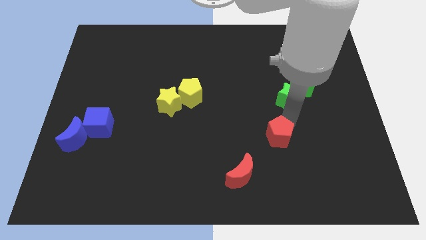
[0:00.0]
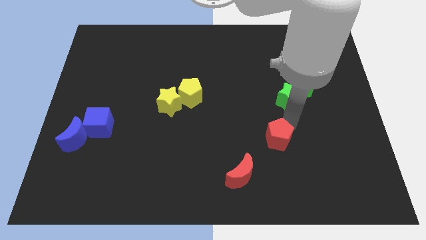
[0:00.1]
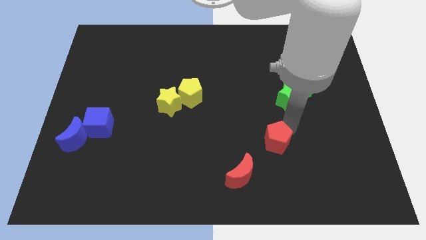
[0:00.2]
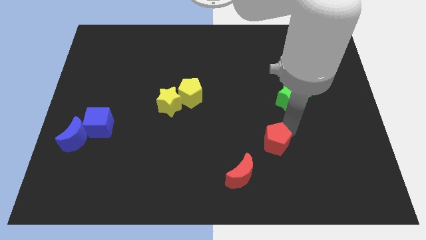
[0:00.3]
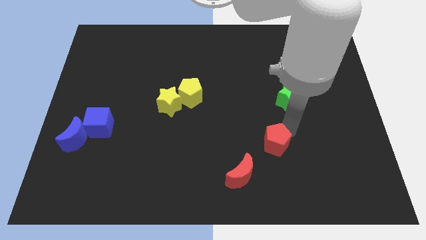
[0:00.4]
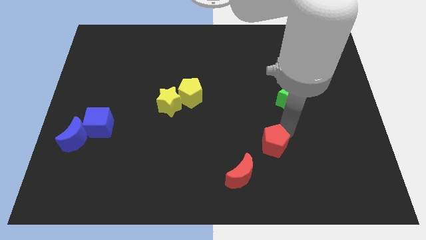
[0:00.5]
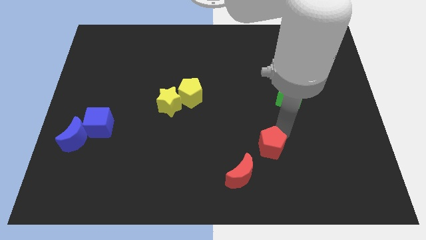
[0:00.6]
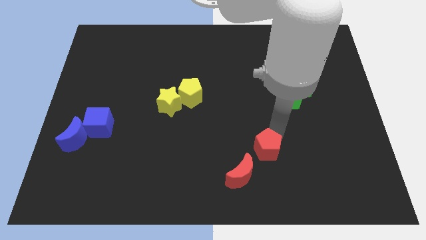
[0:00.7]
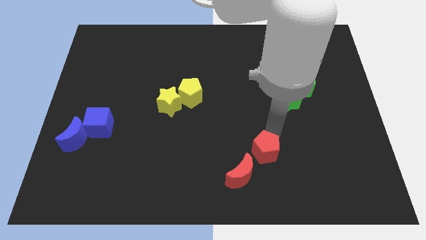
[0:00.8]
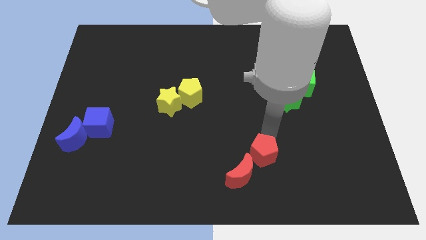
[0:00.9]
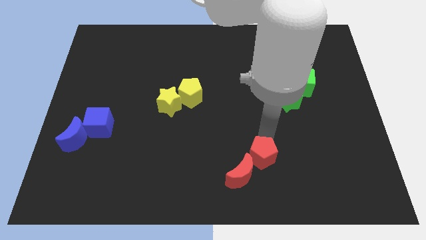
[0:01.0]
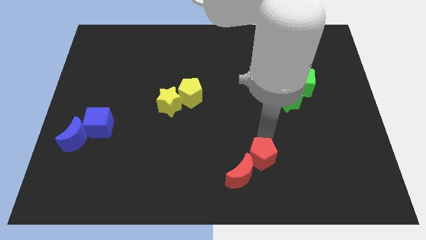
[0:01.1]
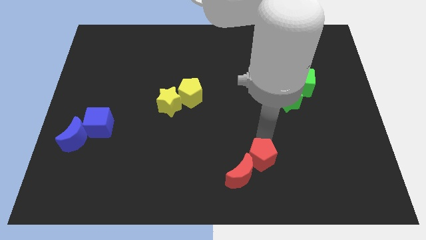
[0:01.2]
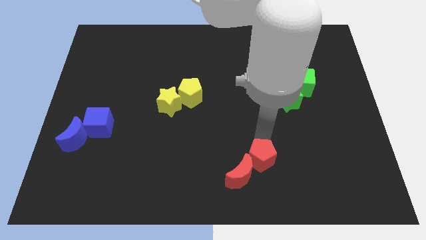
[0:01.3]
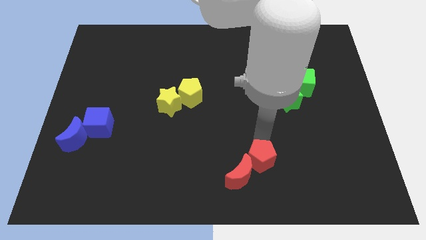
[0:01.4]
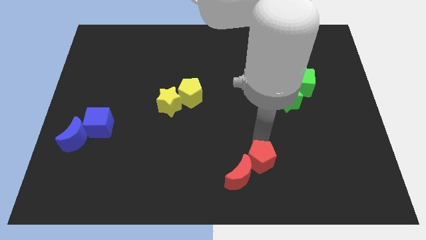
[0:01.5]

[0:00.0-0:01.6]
move the red pentagon into red moon

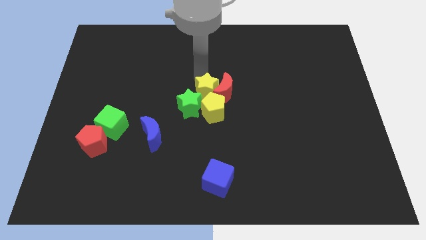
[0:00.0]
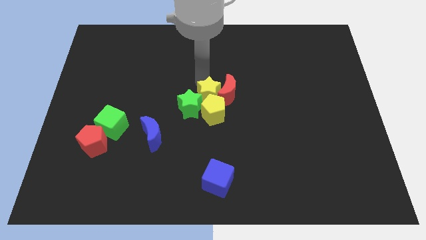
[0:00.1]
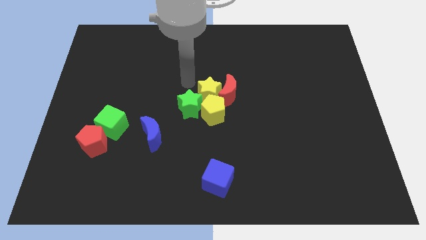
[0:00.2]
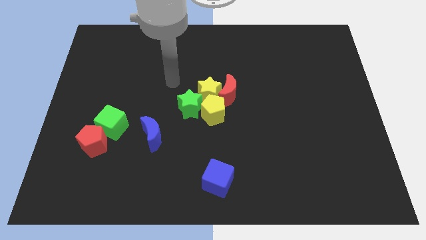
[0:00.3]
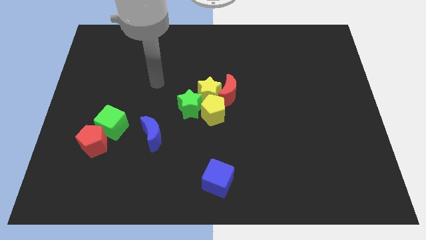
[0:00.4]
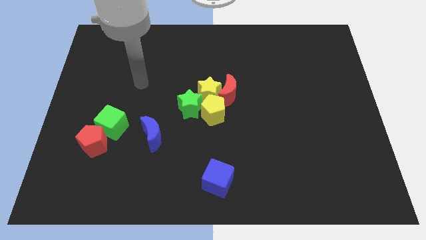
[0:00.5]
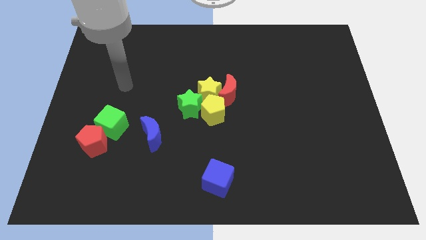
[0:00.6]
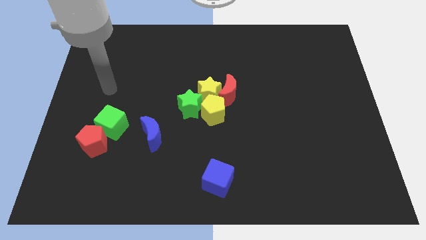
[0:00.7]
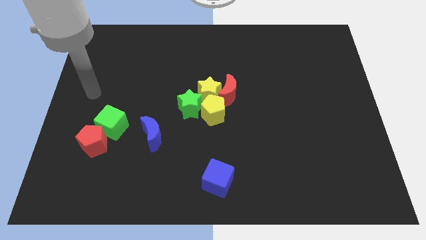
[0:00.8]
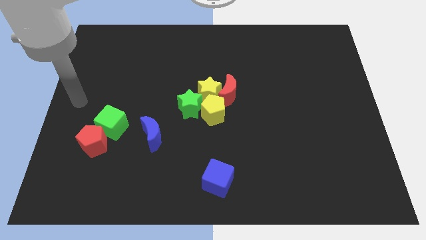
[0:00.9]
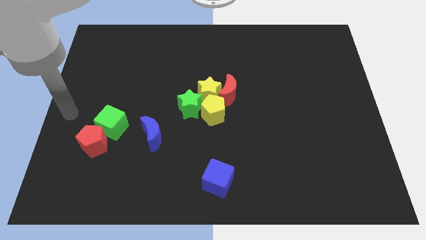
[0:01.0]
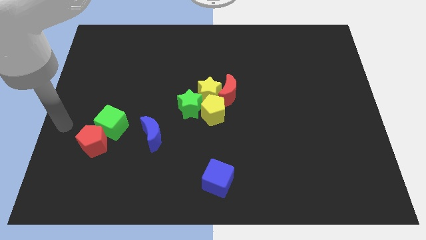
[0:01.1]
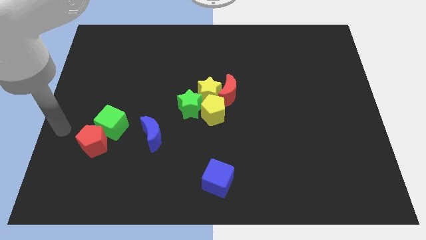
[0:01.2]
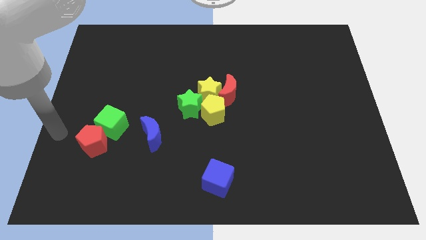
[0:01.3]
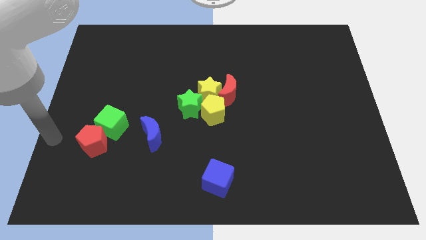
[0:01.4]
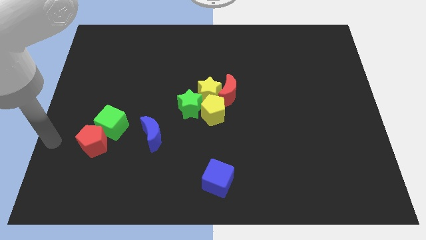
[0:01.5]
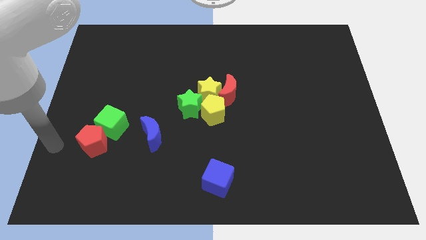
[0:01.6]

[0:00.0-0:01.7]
point your arm to the left side of red pentagon

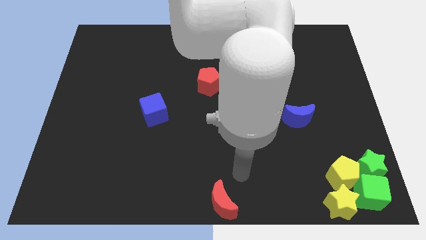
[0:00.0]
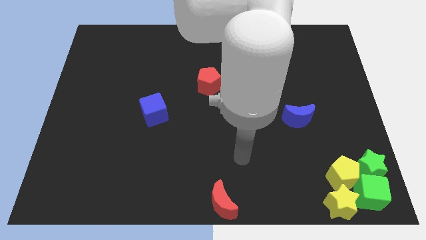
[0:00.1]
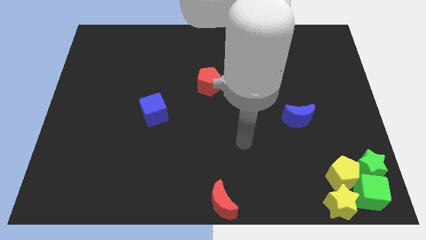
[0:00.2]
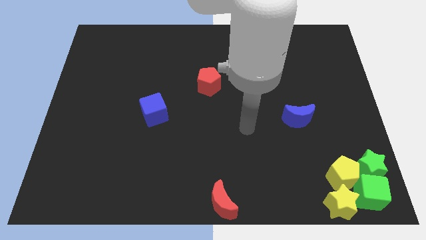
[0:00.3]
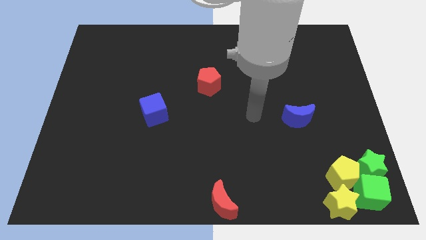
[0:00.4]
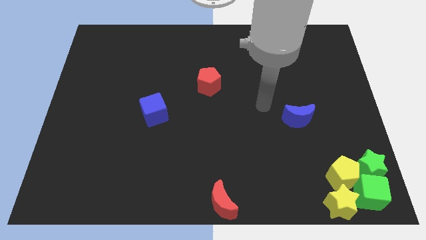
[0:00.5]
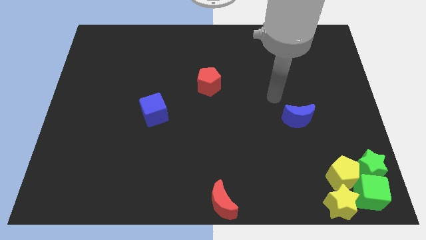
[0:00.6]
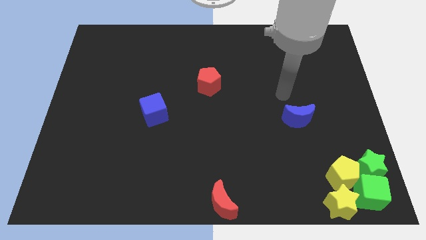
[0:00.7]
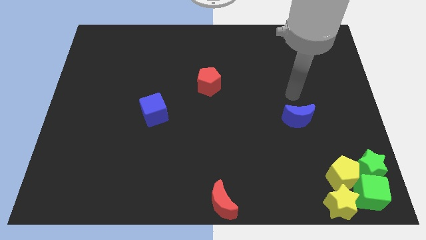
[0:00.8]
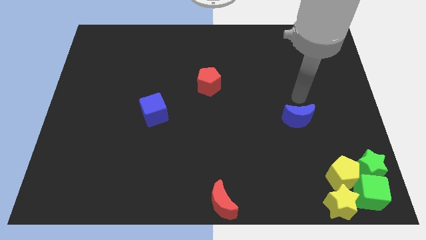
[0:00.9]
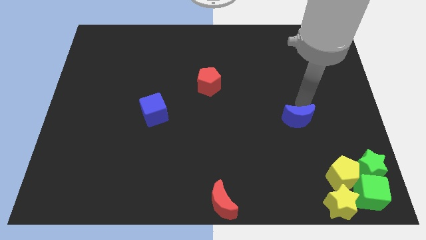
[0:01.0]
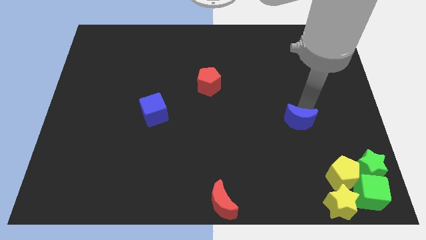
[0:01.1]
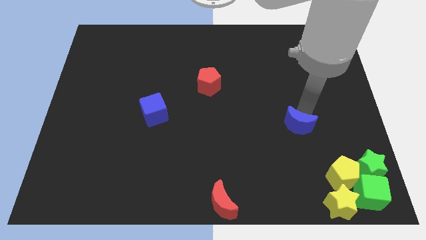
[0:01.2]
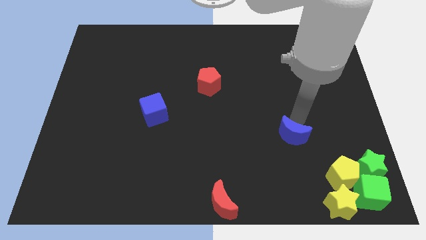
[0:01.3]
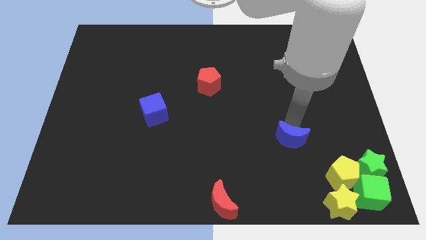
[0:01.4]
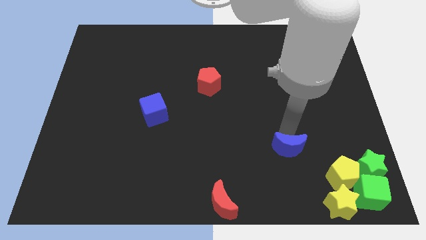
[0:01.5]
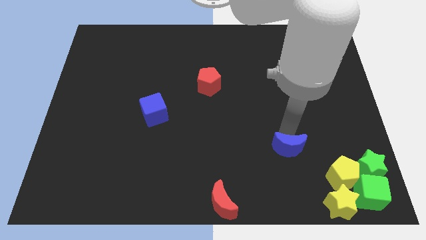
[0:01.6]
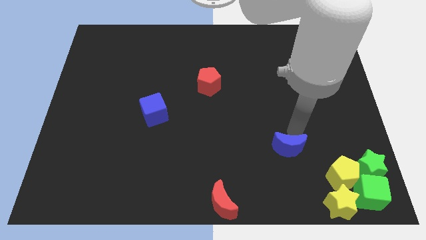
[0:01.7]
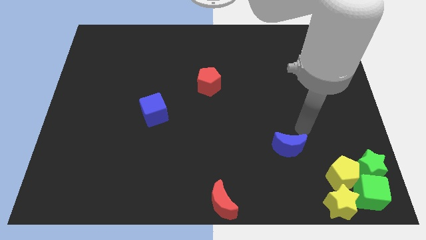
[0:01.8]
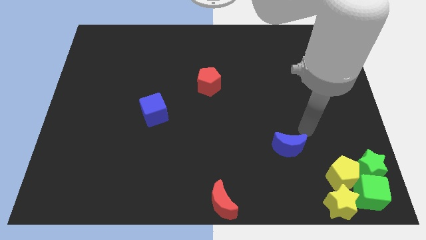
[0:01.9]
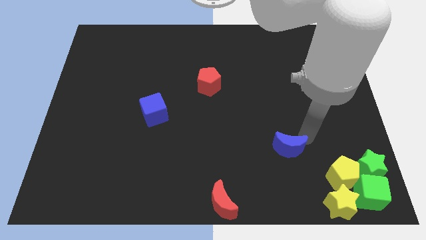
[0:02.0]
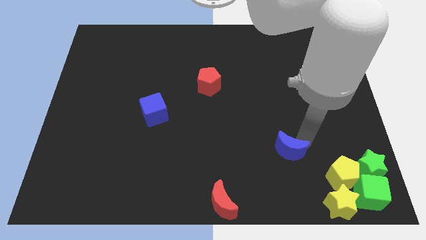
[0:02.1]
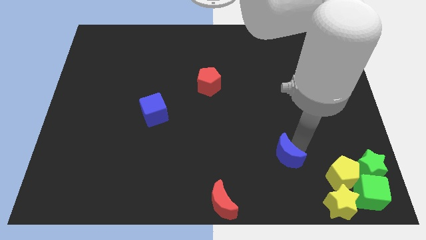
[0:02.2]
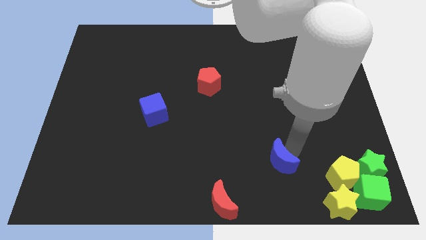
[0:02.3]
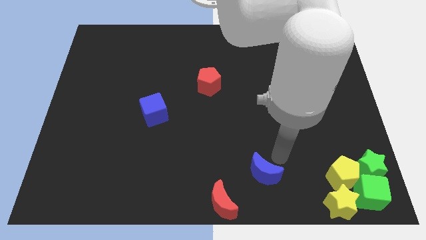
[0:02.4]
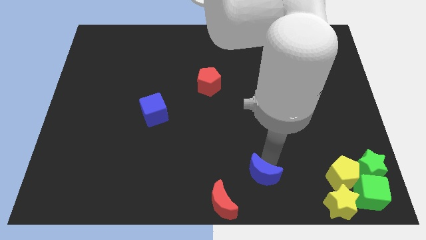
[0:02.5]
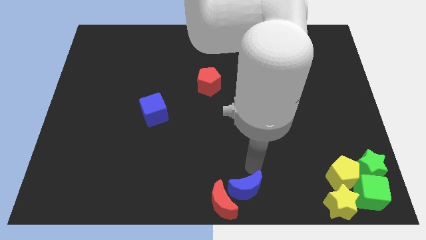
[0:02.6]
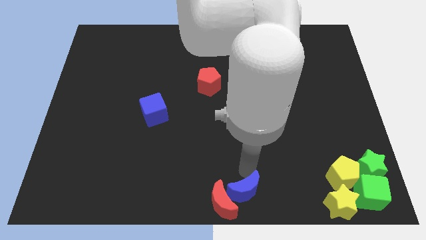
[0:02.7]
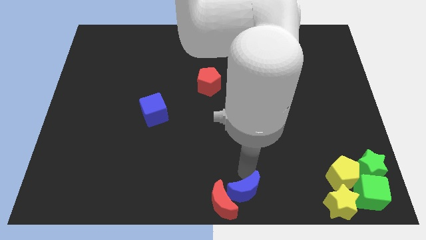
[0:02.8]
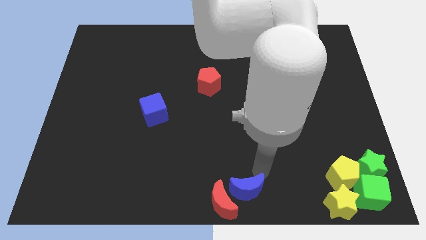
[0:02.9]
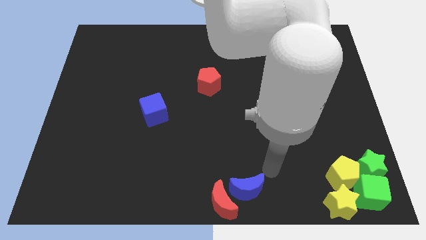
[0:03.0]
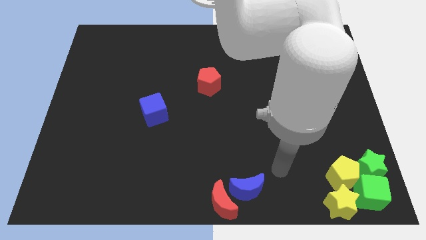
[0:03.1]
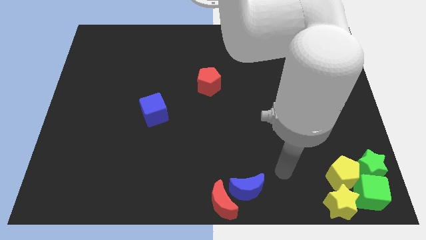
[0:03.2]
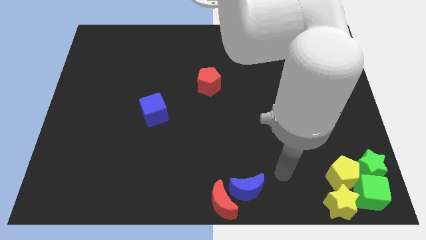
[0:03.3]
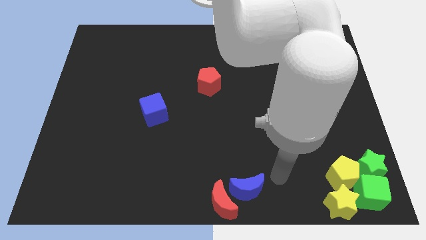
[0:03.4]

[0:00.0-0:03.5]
push the blue crescent close to the red crescent

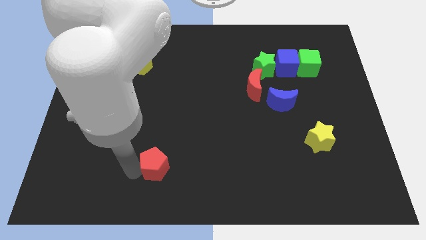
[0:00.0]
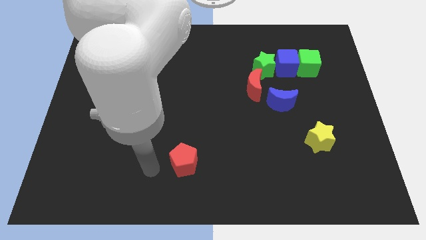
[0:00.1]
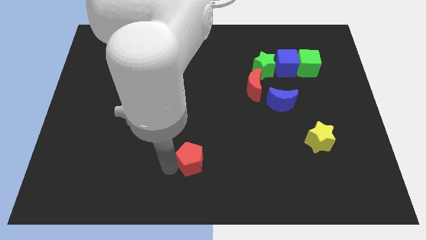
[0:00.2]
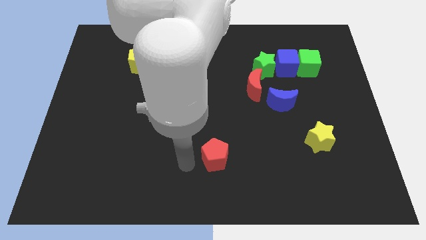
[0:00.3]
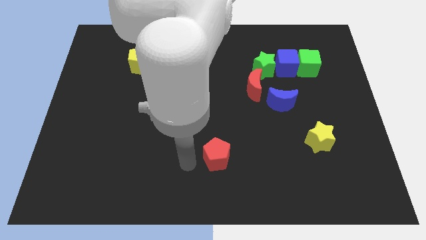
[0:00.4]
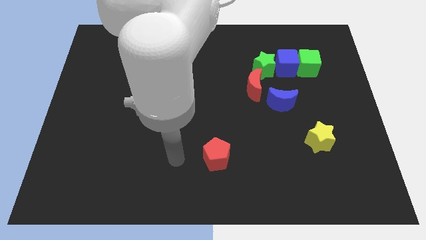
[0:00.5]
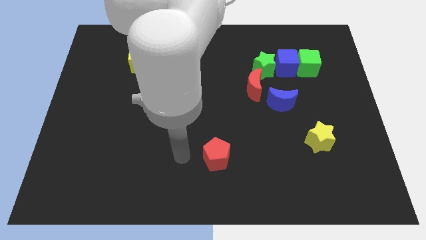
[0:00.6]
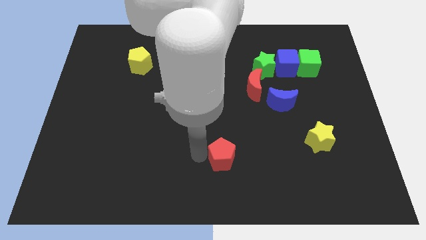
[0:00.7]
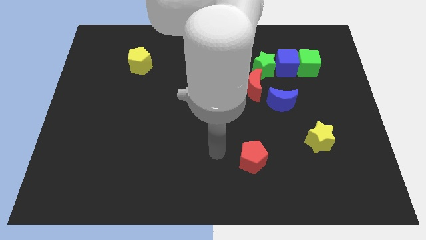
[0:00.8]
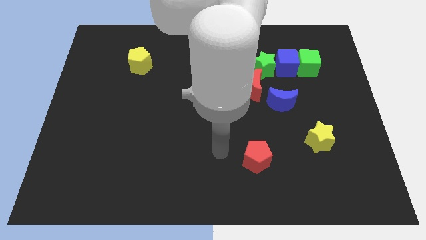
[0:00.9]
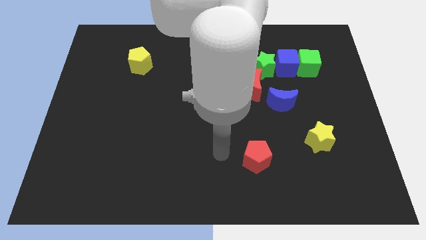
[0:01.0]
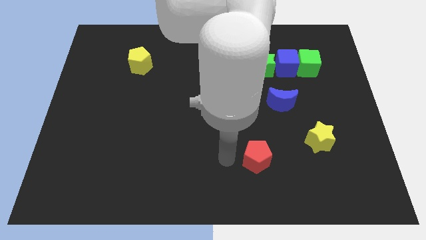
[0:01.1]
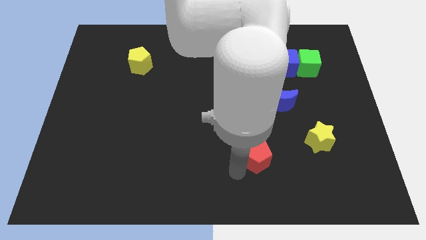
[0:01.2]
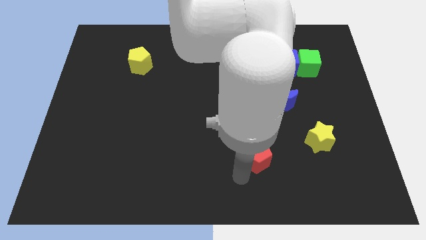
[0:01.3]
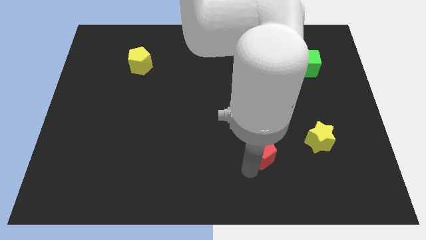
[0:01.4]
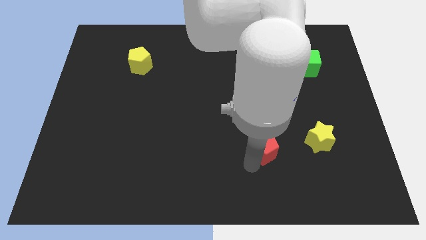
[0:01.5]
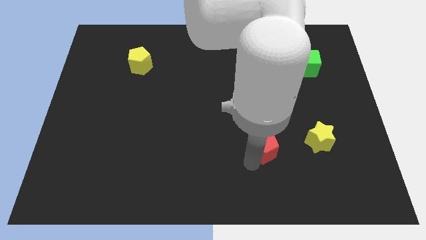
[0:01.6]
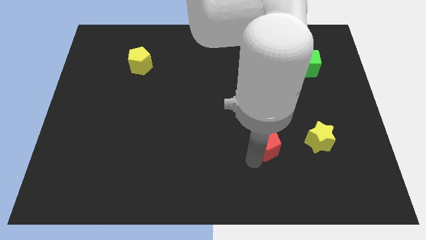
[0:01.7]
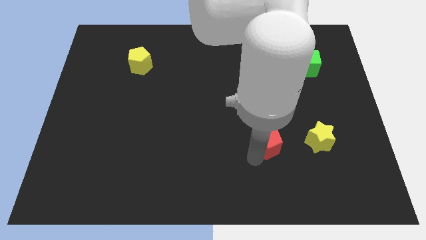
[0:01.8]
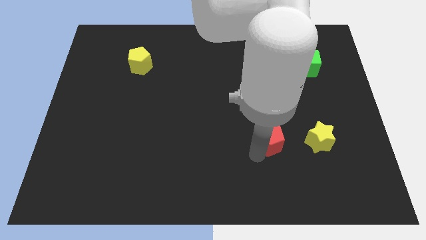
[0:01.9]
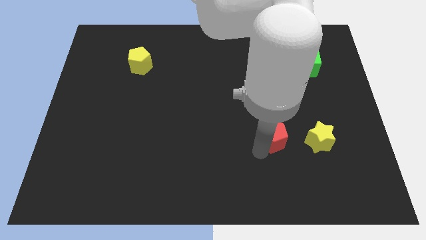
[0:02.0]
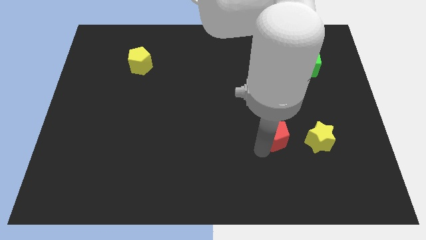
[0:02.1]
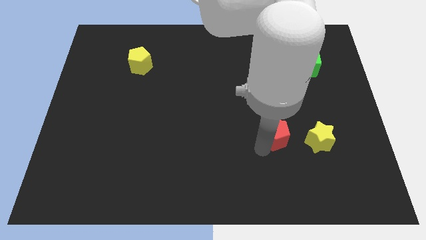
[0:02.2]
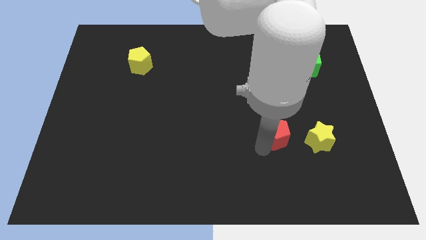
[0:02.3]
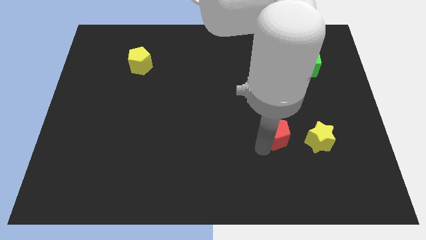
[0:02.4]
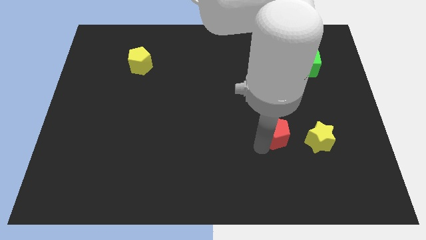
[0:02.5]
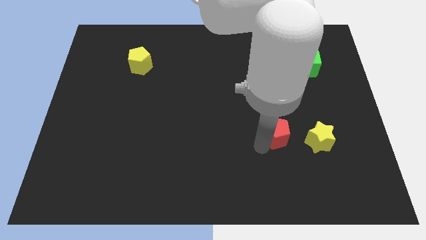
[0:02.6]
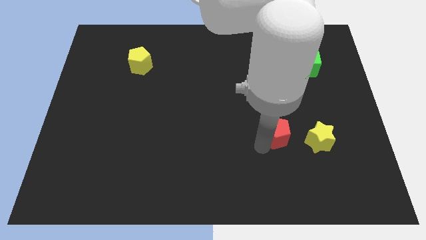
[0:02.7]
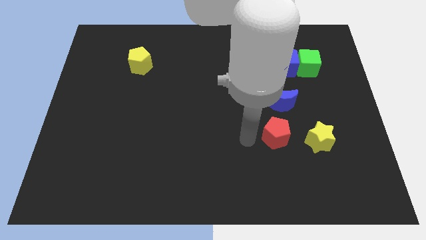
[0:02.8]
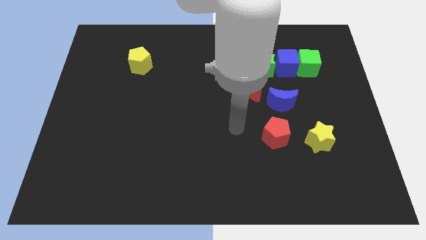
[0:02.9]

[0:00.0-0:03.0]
push the red pentagon to the left side of the yellow star
